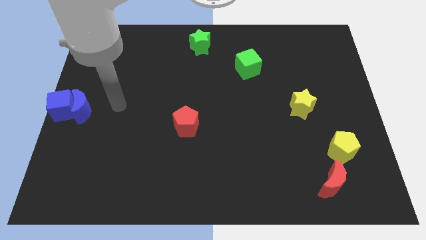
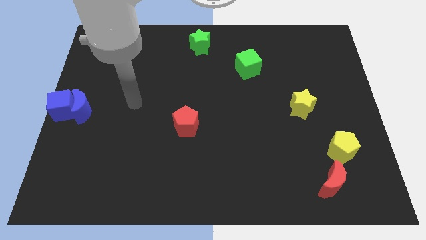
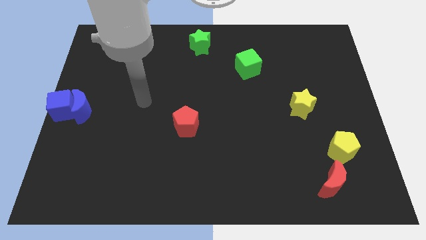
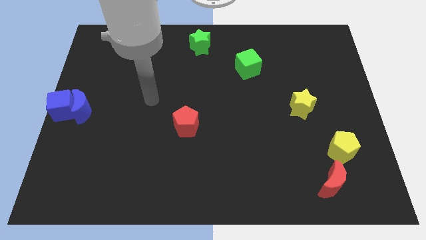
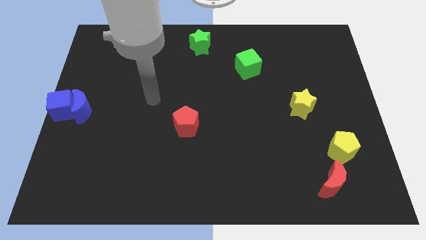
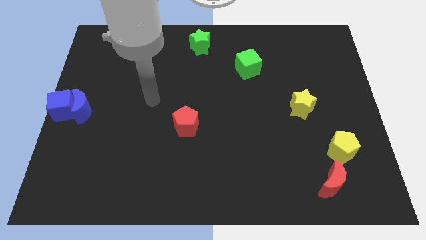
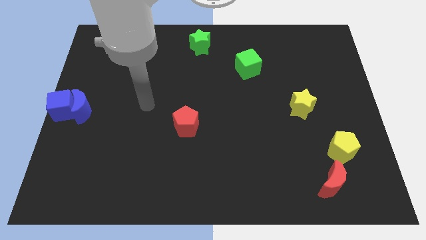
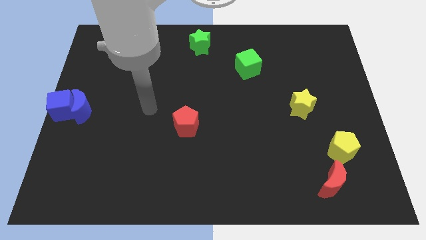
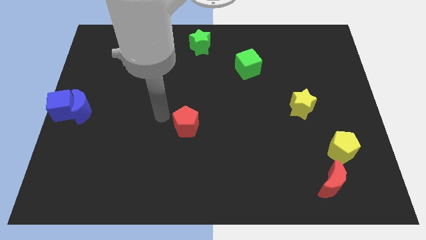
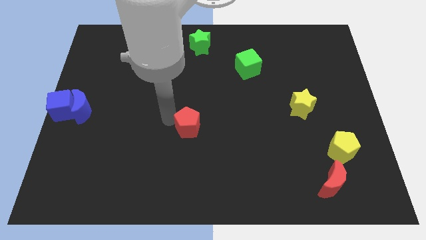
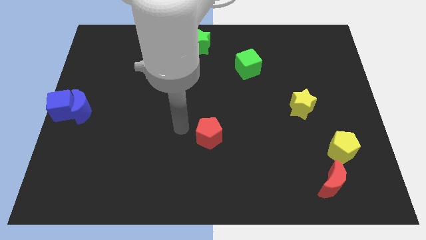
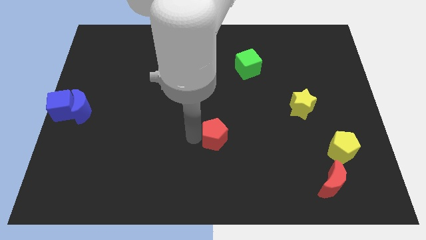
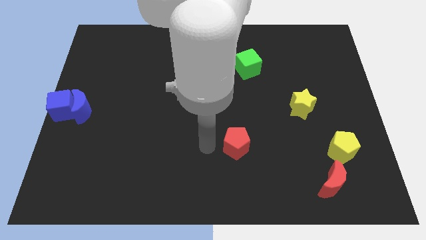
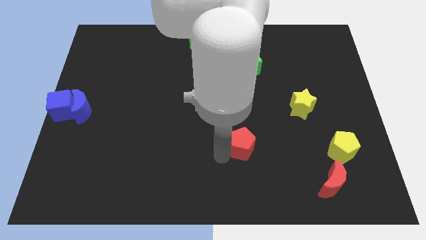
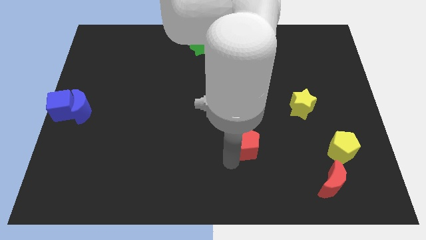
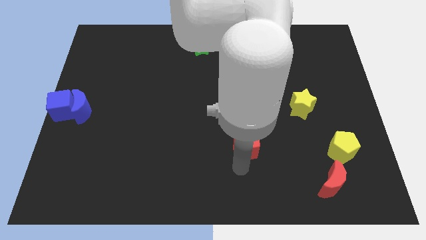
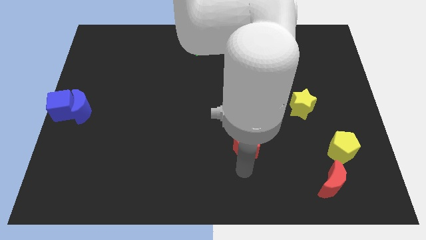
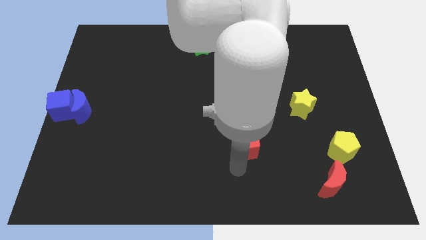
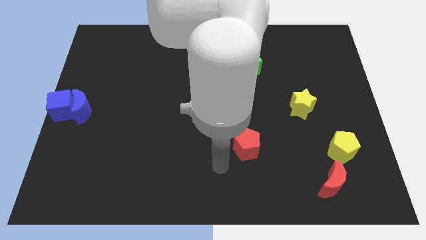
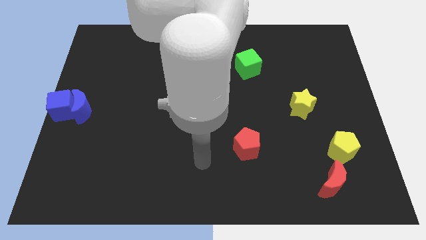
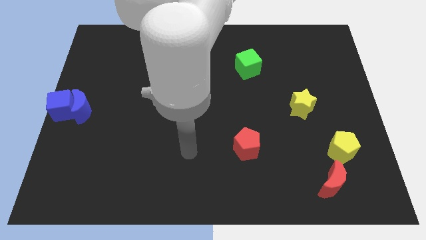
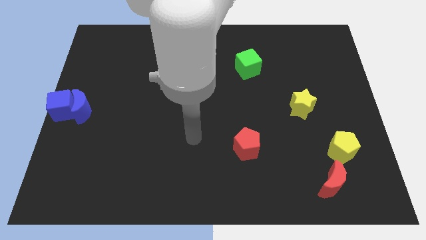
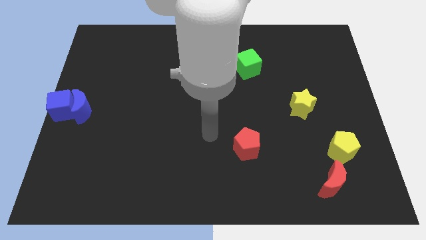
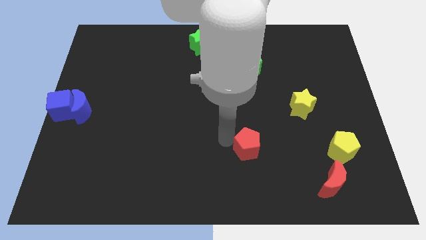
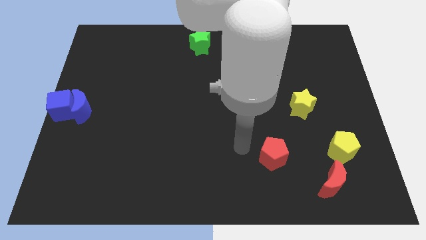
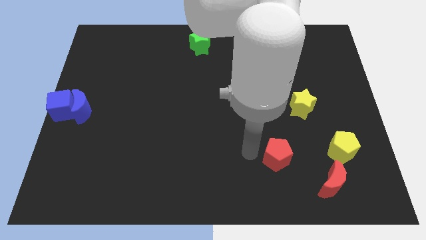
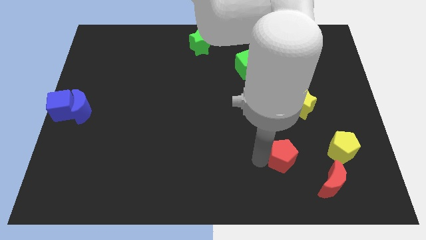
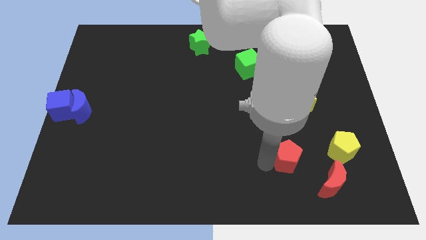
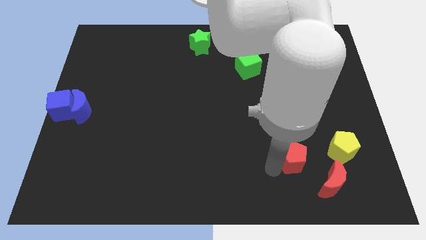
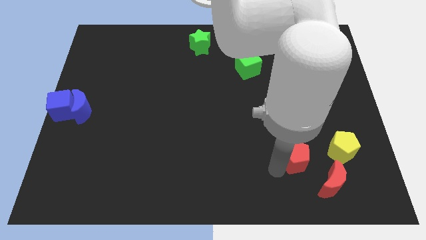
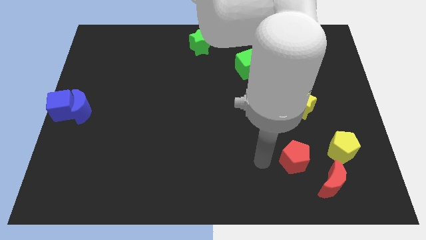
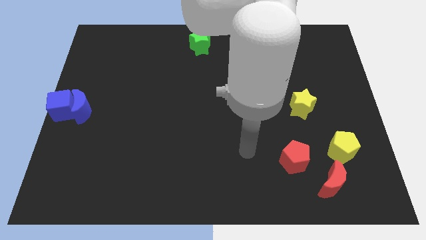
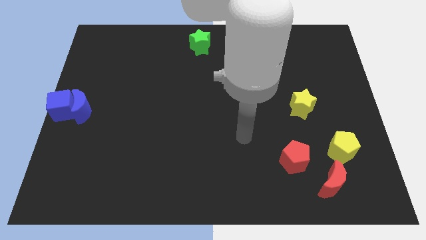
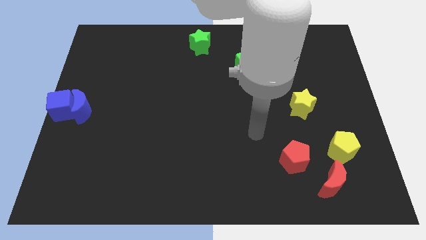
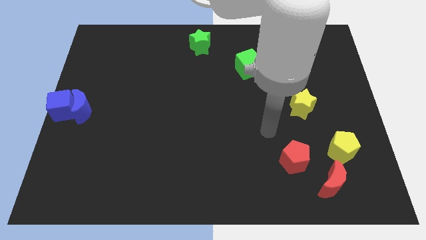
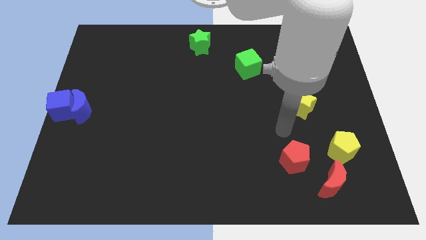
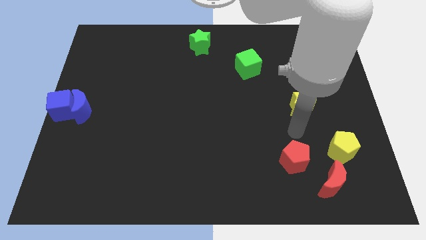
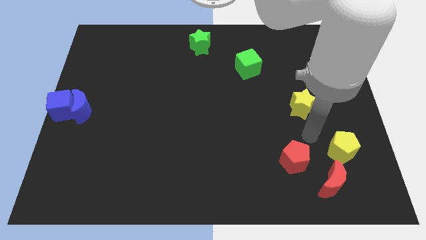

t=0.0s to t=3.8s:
move the red pentagon to the left of the yellow pentagon

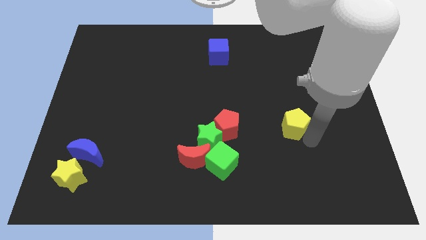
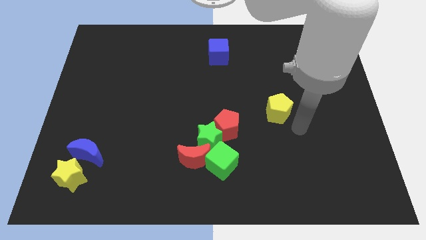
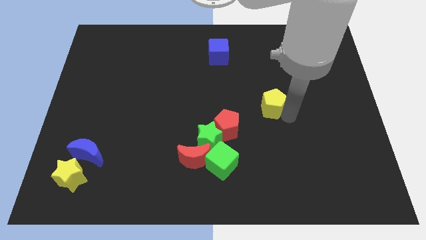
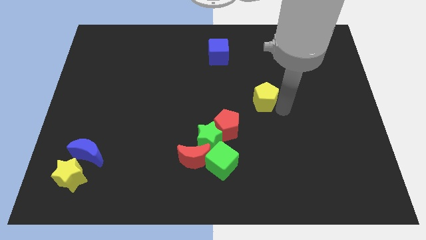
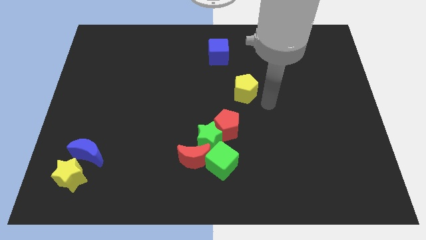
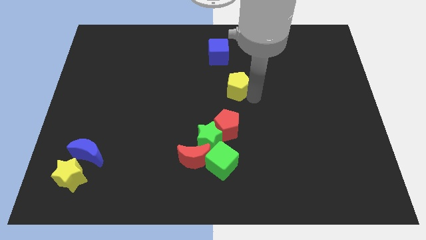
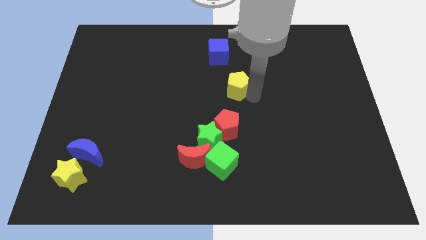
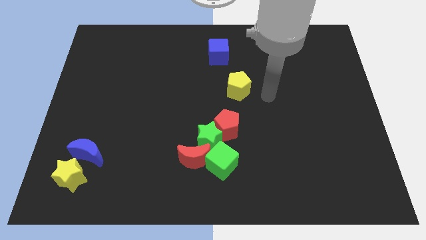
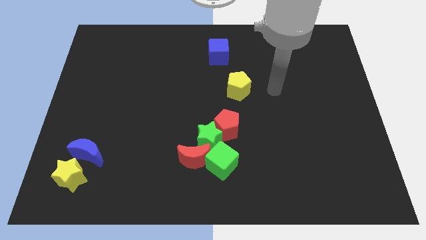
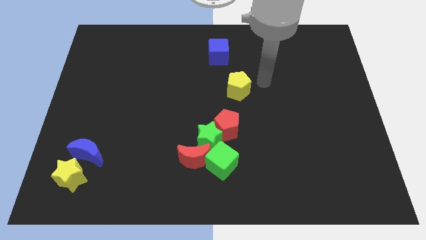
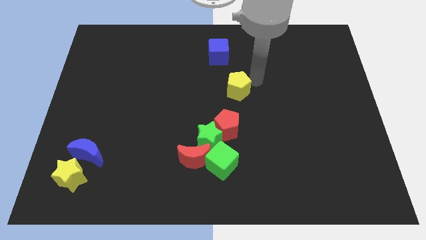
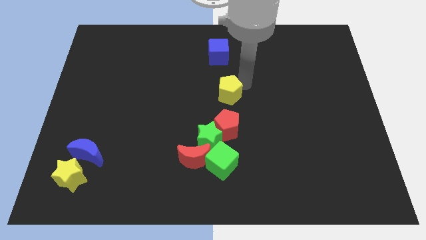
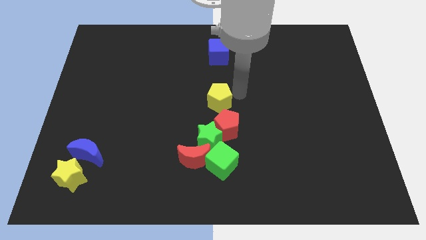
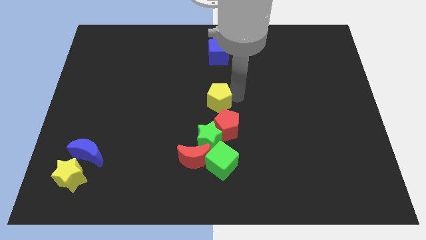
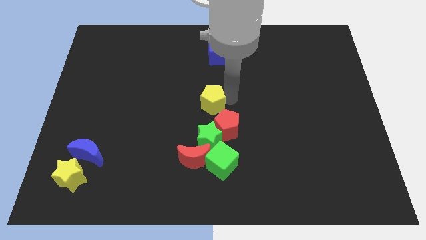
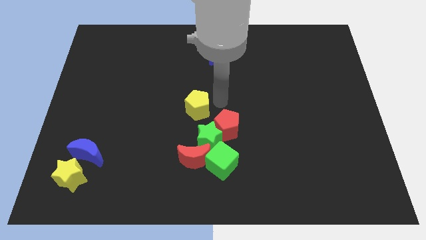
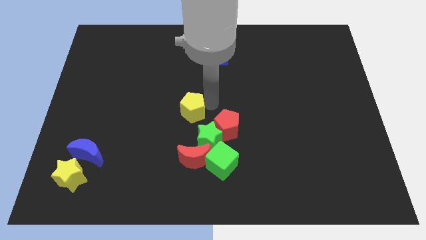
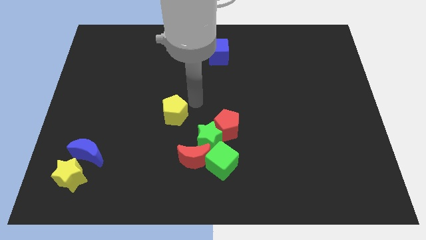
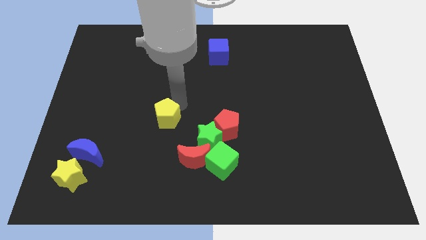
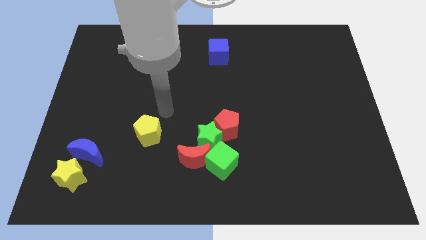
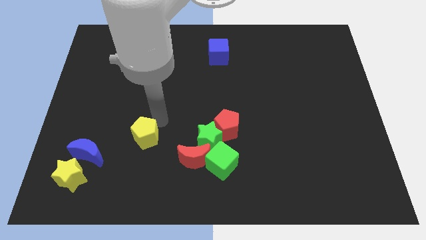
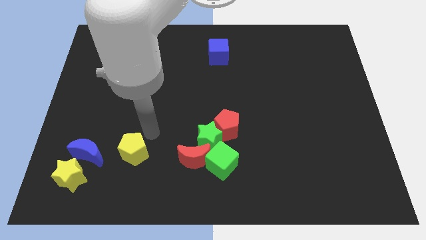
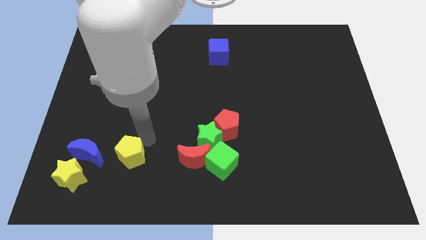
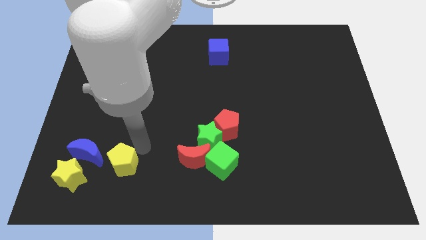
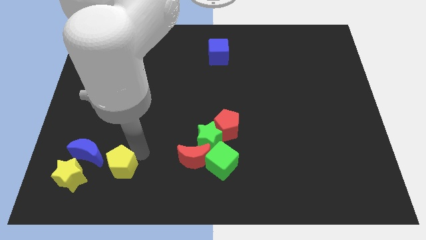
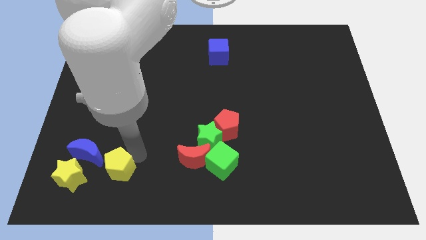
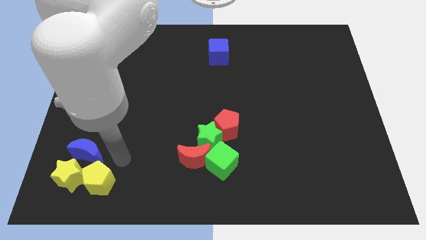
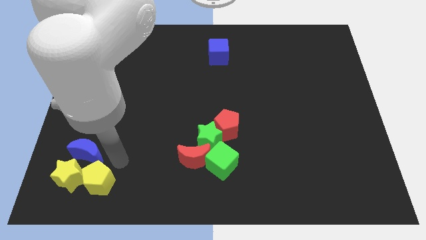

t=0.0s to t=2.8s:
push the yellow pentagon to the right of the yellow star

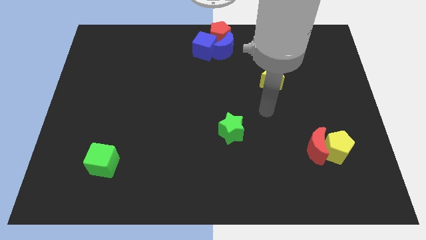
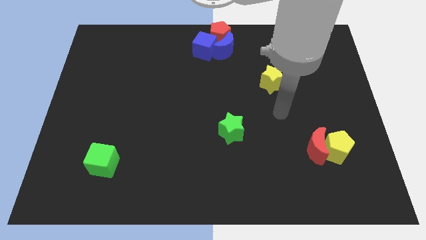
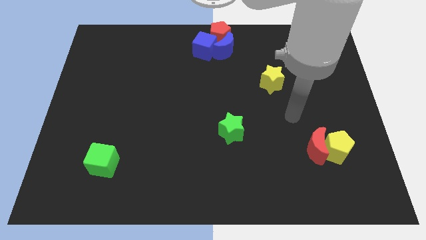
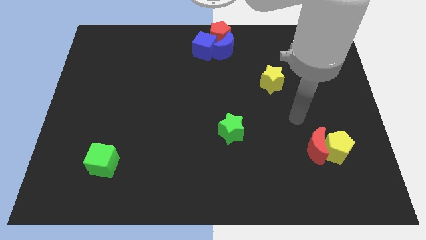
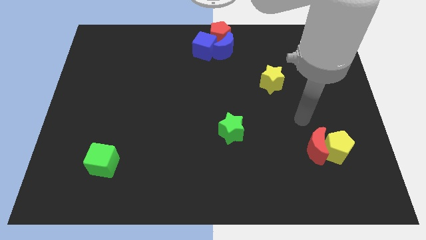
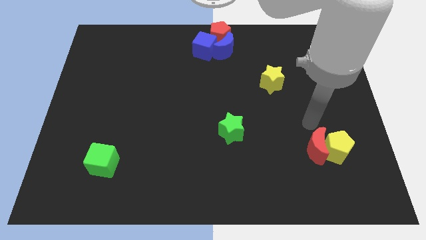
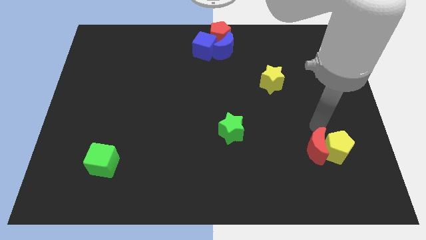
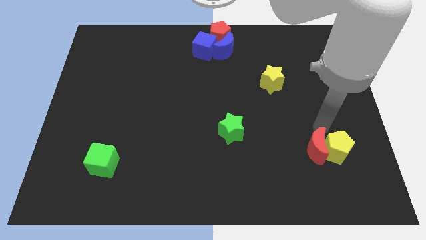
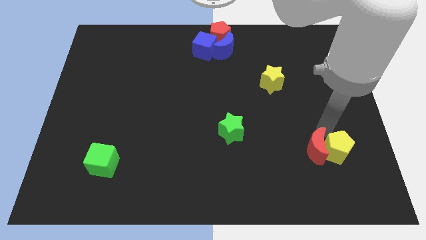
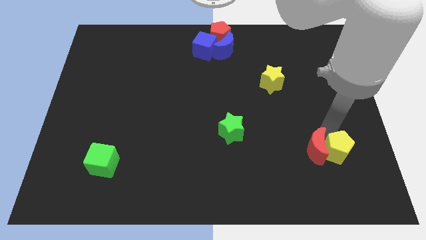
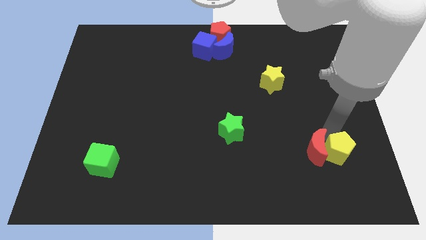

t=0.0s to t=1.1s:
tap on top left side of yellow pentagon

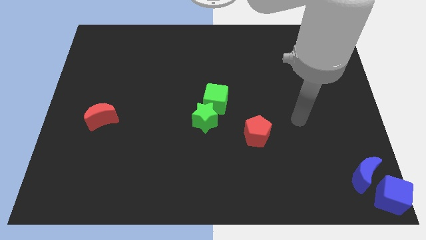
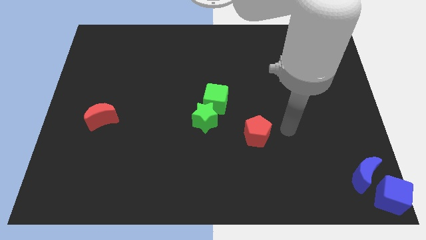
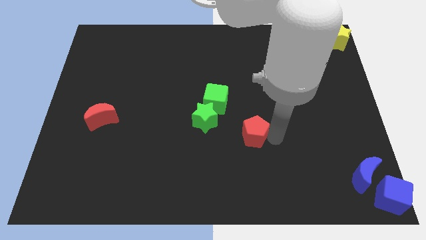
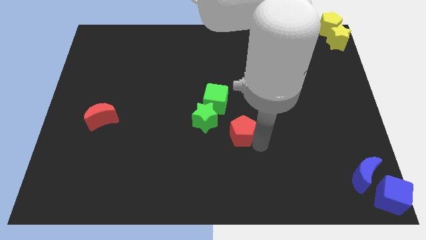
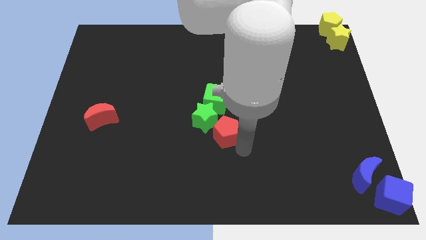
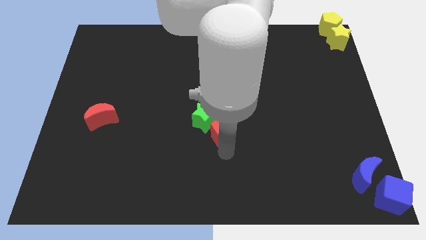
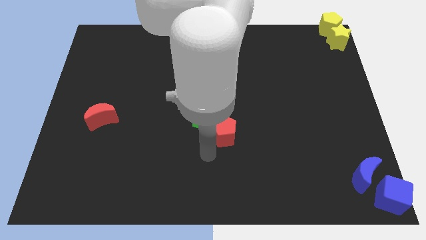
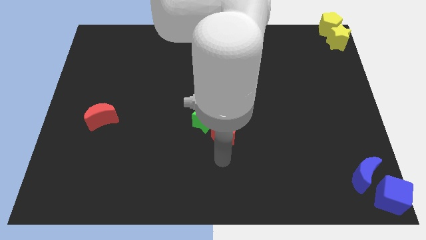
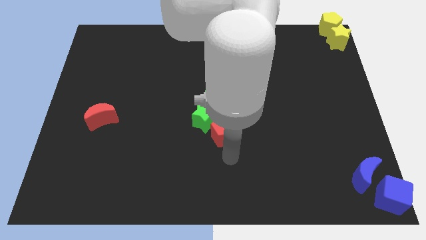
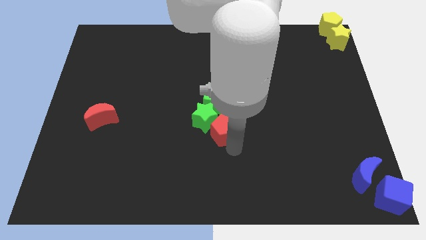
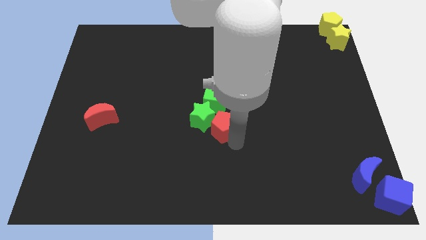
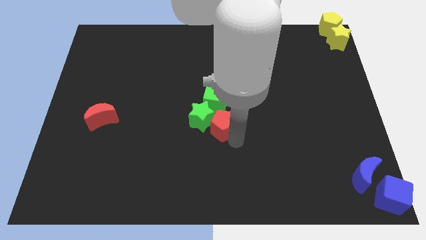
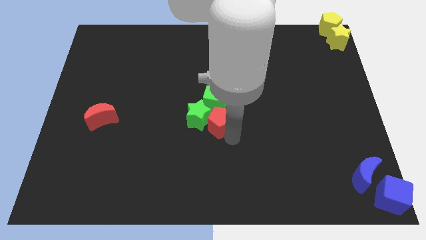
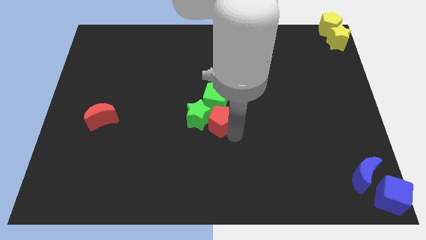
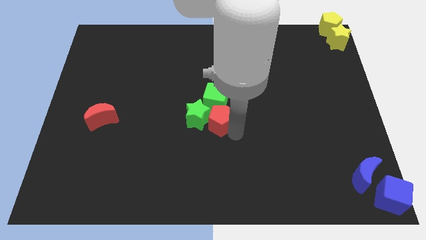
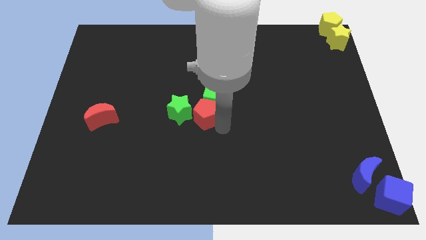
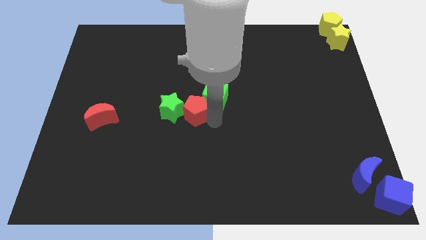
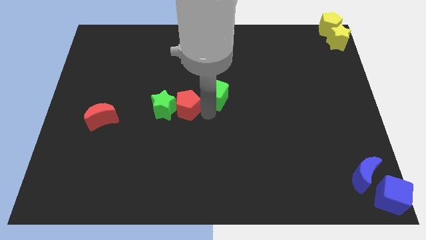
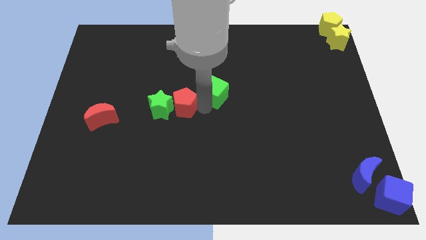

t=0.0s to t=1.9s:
move red pentagon in between two green blocks
